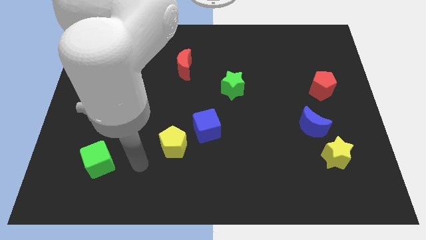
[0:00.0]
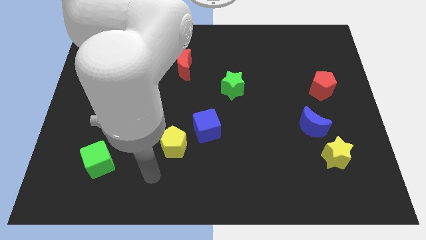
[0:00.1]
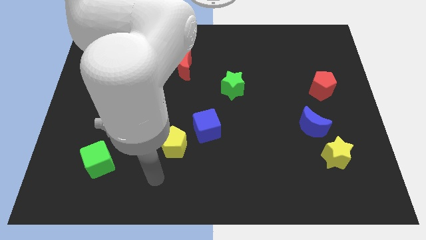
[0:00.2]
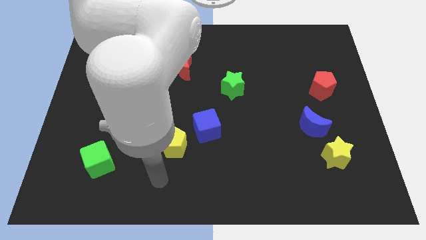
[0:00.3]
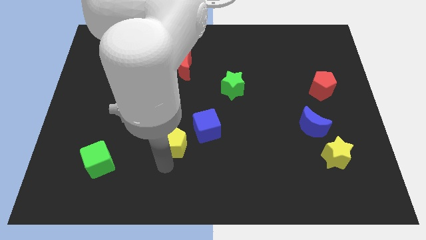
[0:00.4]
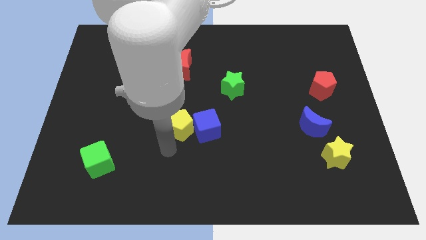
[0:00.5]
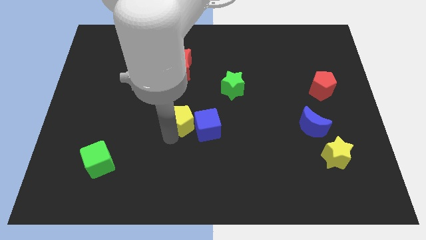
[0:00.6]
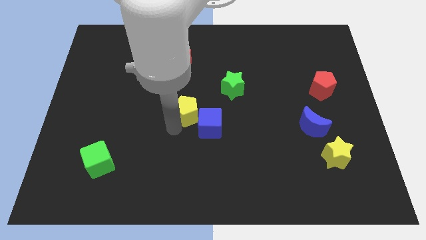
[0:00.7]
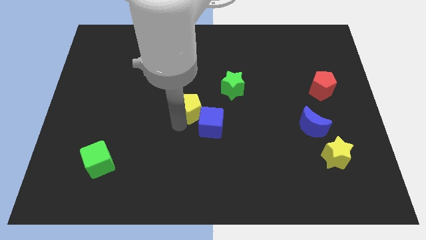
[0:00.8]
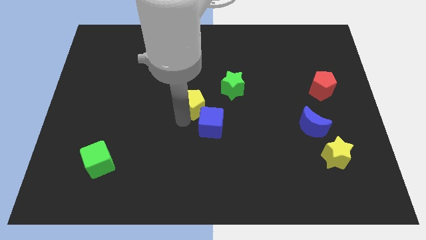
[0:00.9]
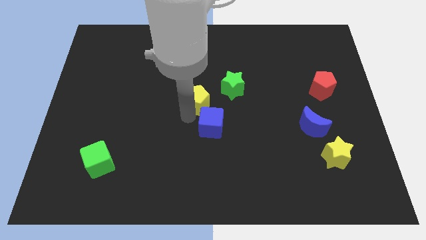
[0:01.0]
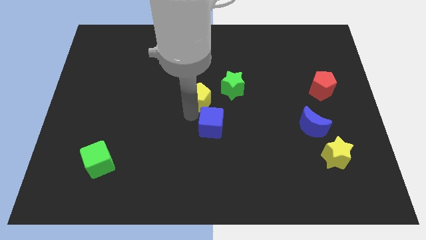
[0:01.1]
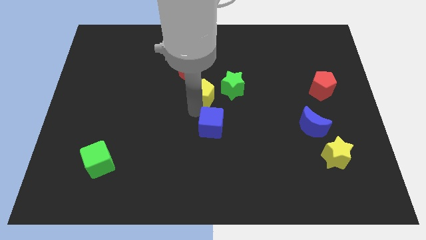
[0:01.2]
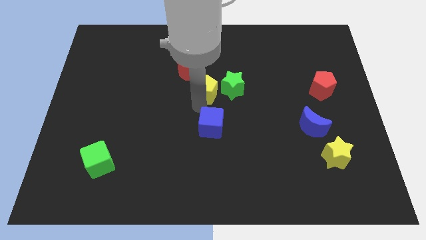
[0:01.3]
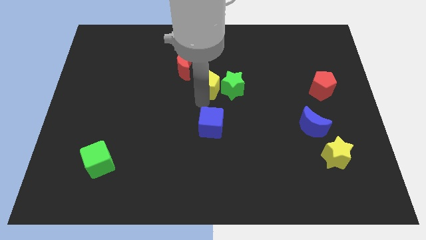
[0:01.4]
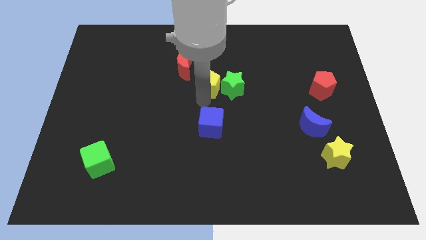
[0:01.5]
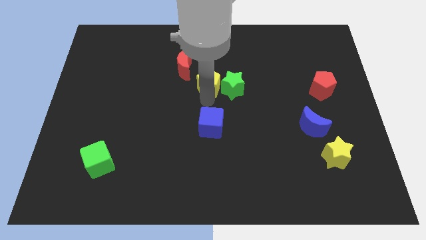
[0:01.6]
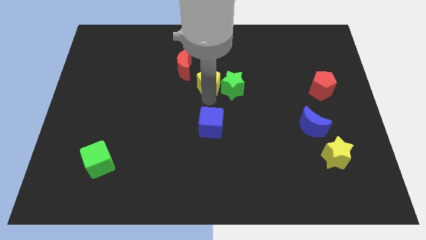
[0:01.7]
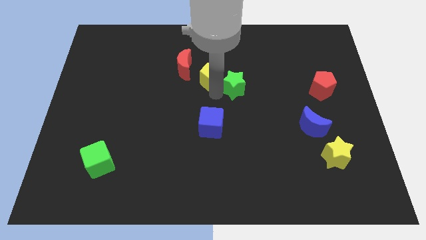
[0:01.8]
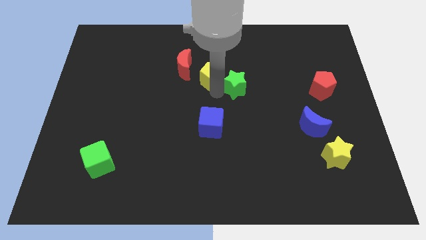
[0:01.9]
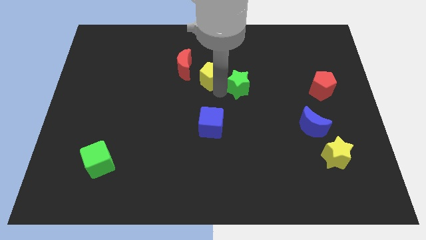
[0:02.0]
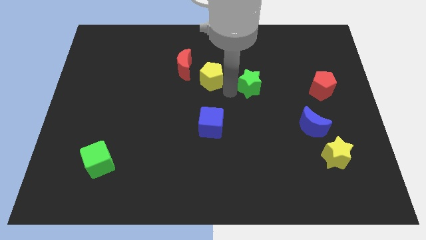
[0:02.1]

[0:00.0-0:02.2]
move the yellow pentagon near to the green star

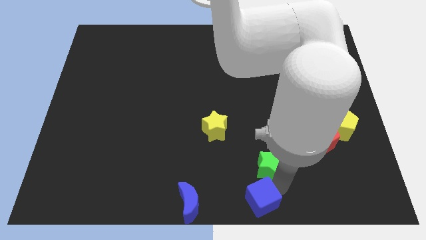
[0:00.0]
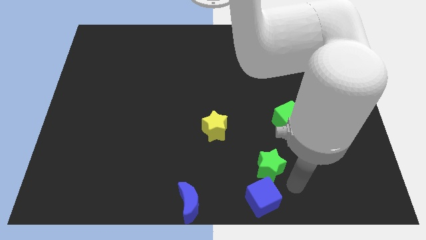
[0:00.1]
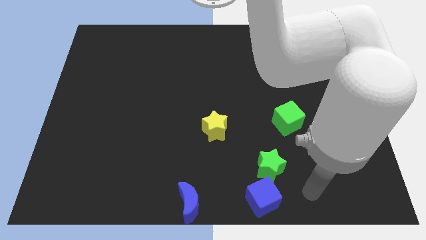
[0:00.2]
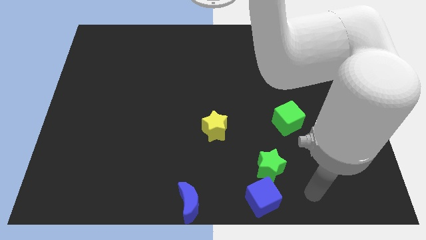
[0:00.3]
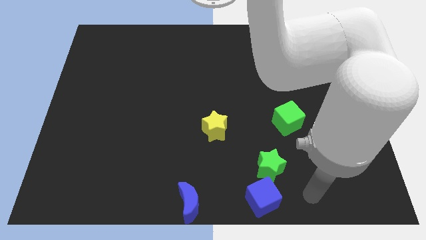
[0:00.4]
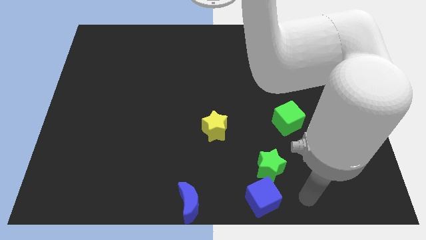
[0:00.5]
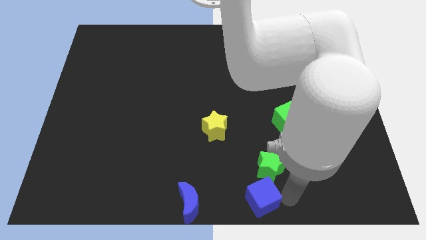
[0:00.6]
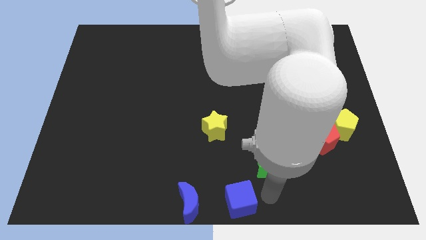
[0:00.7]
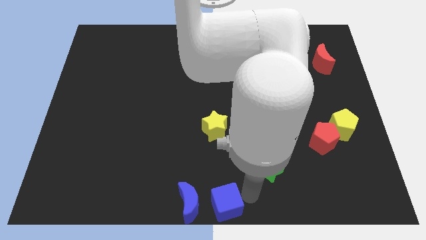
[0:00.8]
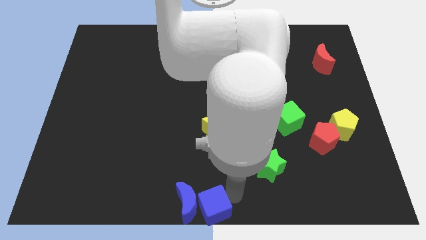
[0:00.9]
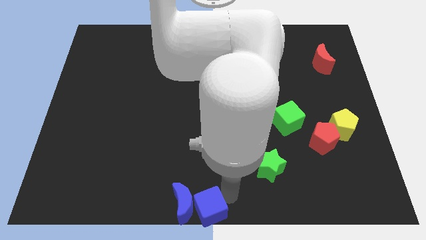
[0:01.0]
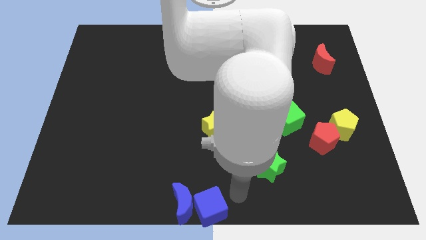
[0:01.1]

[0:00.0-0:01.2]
push the blue cube into the blue crescent

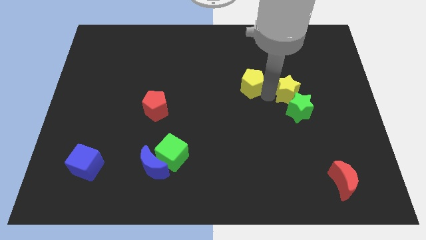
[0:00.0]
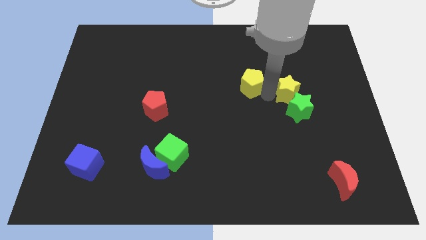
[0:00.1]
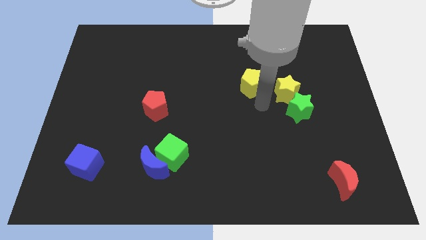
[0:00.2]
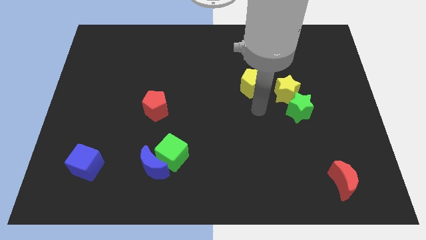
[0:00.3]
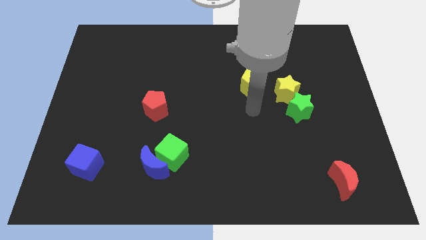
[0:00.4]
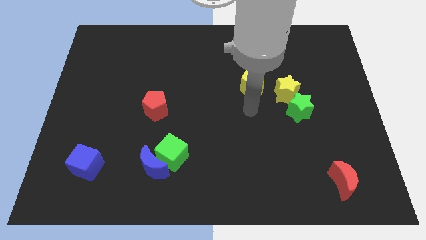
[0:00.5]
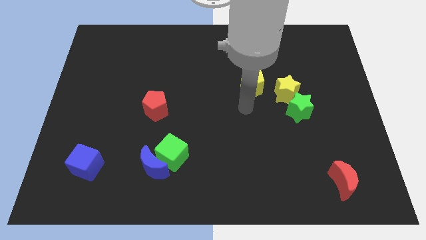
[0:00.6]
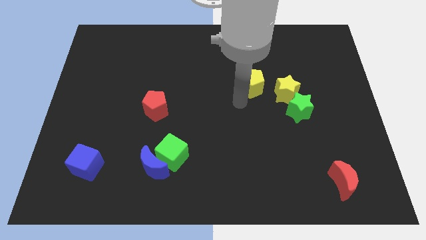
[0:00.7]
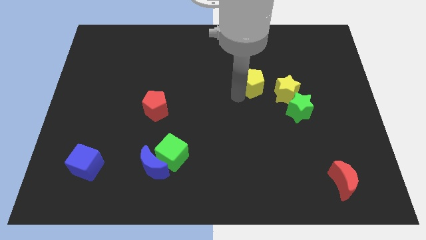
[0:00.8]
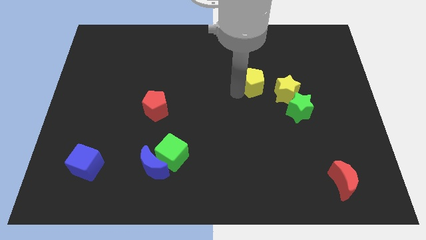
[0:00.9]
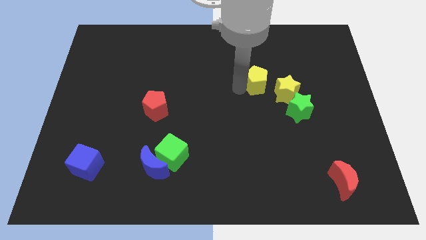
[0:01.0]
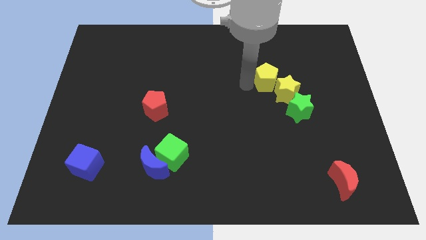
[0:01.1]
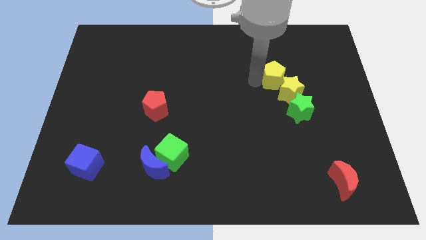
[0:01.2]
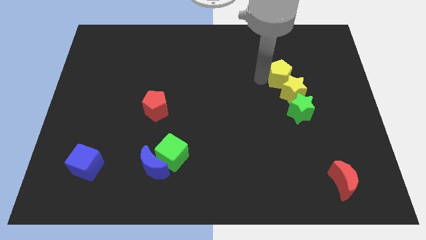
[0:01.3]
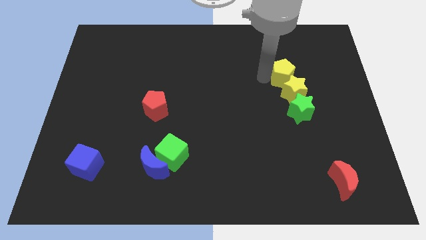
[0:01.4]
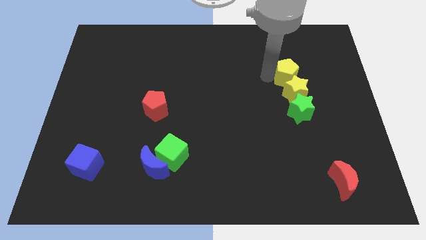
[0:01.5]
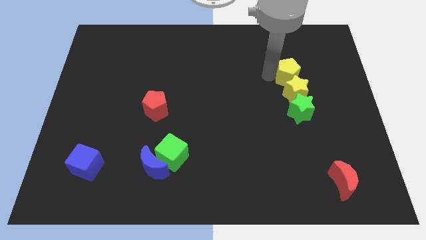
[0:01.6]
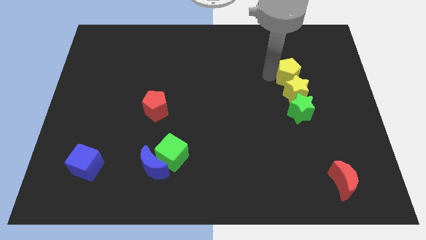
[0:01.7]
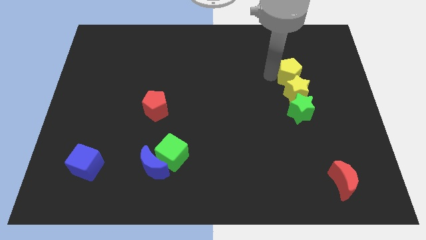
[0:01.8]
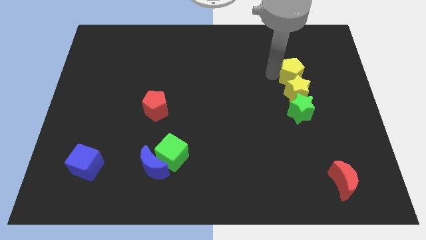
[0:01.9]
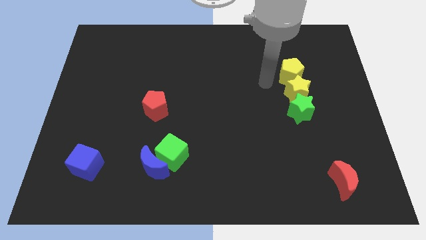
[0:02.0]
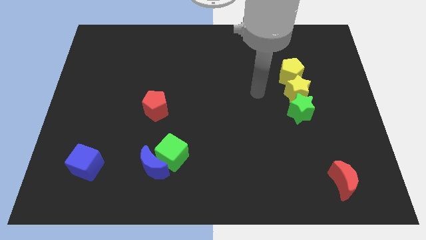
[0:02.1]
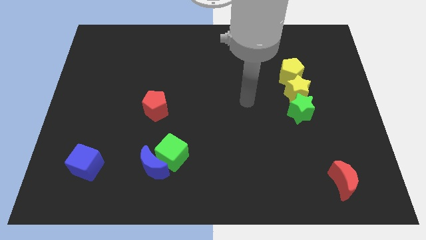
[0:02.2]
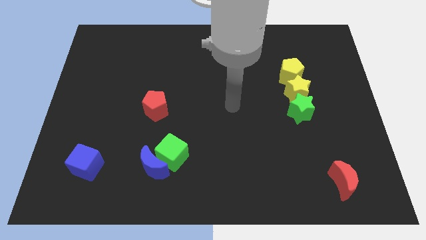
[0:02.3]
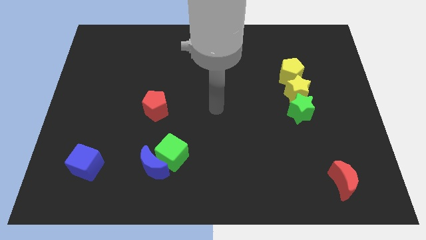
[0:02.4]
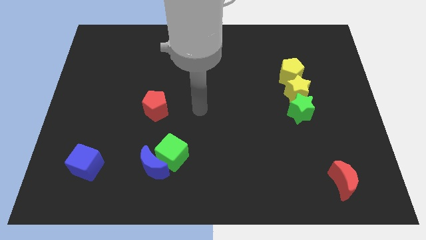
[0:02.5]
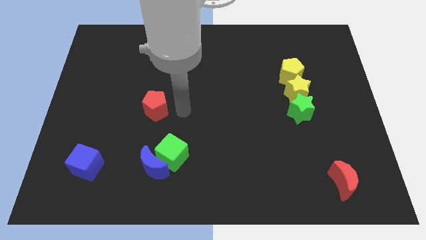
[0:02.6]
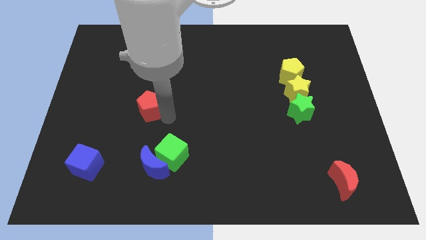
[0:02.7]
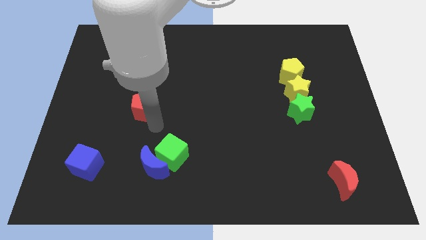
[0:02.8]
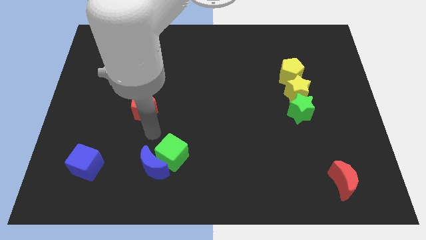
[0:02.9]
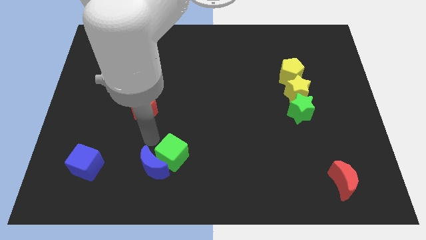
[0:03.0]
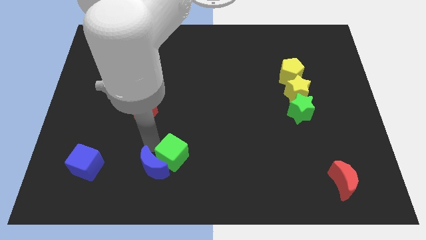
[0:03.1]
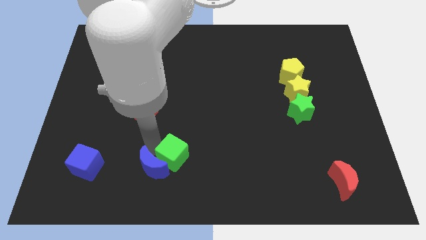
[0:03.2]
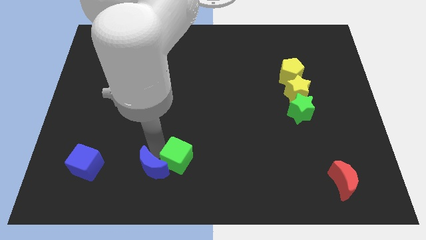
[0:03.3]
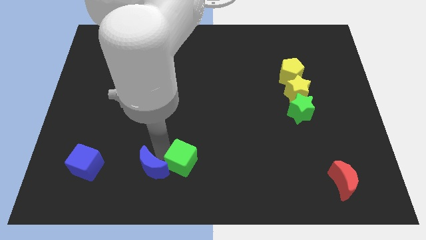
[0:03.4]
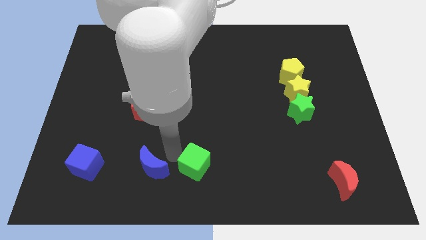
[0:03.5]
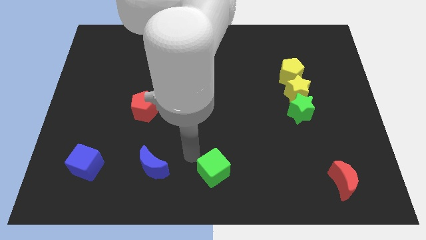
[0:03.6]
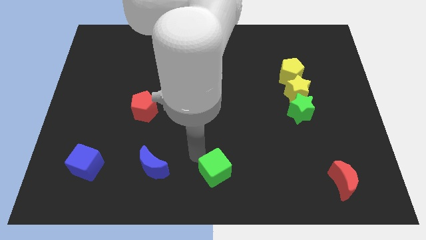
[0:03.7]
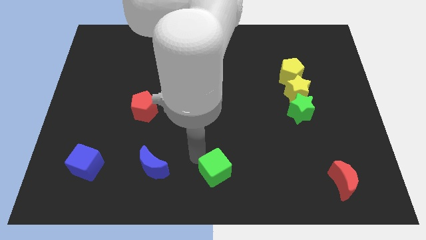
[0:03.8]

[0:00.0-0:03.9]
push the green cube towards the bottom center of the board

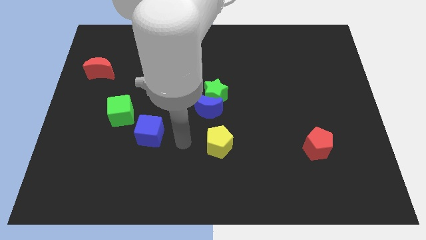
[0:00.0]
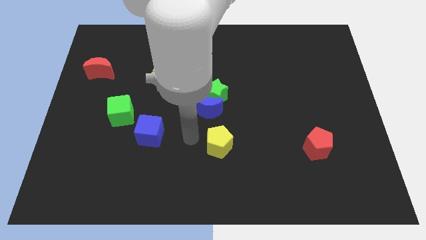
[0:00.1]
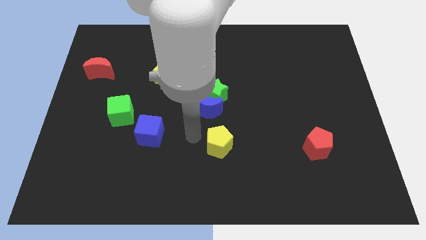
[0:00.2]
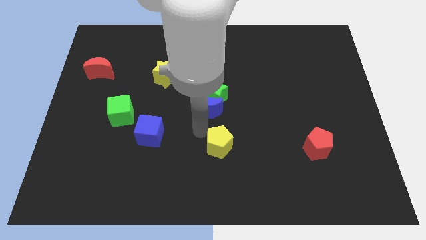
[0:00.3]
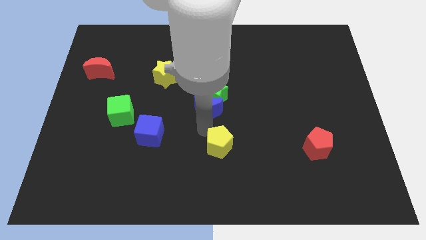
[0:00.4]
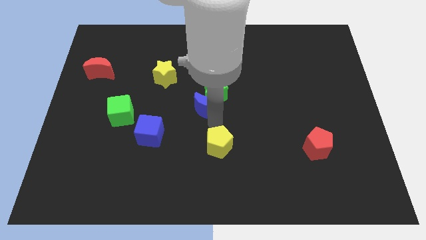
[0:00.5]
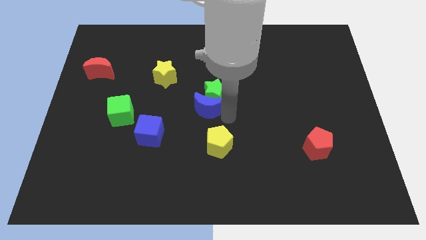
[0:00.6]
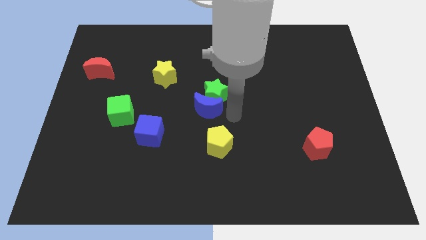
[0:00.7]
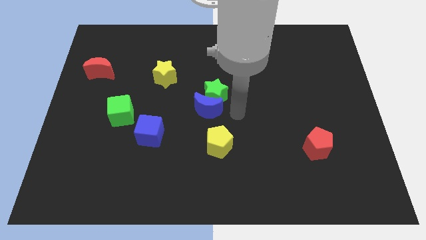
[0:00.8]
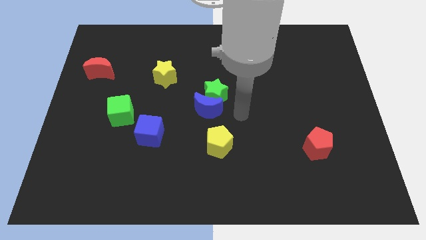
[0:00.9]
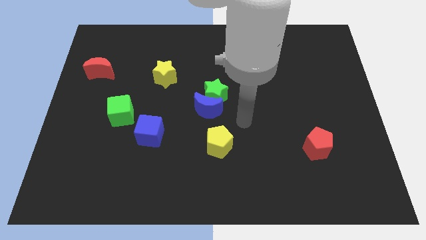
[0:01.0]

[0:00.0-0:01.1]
move your arm away from blue cube

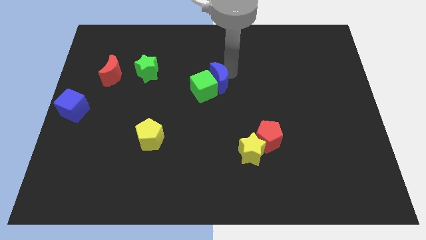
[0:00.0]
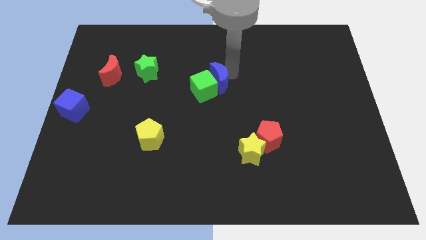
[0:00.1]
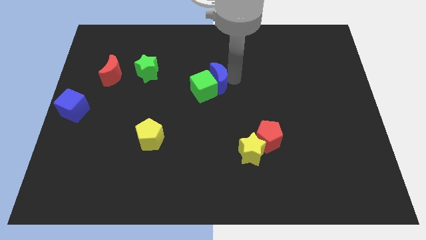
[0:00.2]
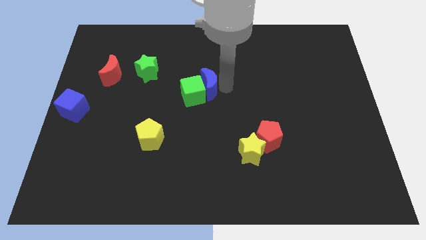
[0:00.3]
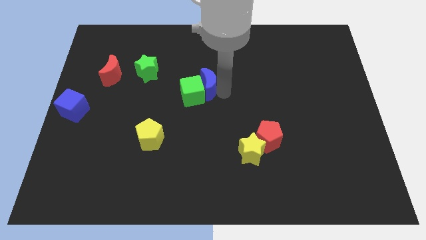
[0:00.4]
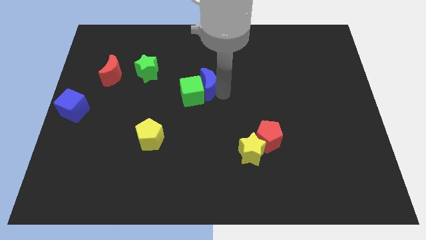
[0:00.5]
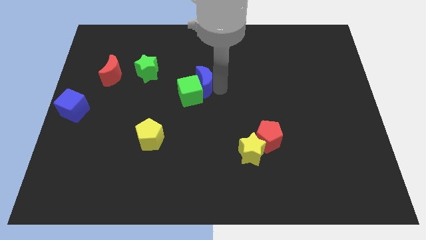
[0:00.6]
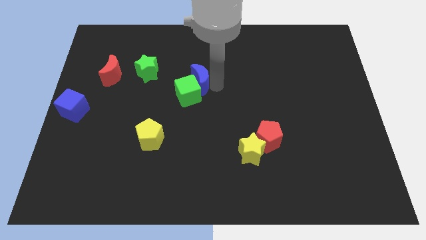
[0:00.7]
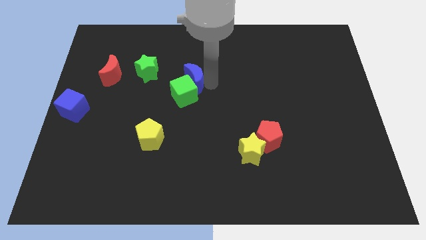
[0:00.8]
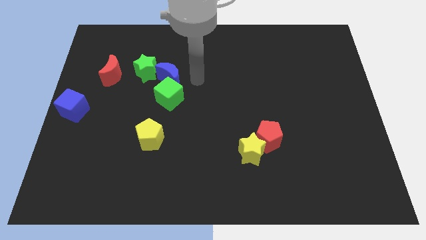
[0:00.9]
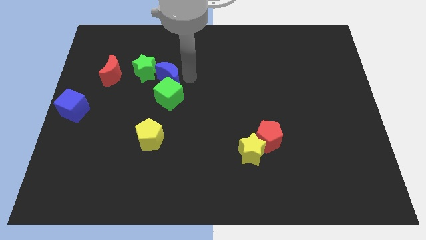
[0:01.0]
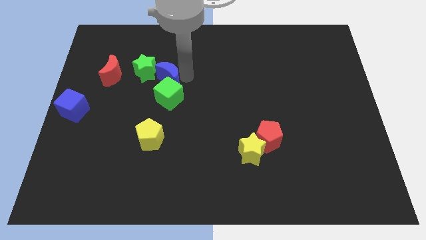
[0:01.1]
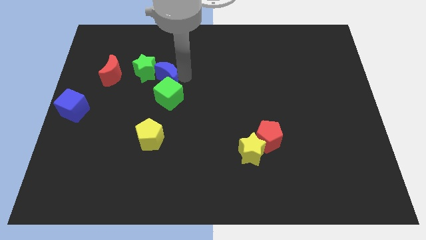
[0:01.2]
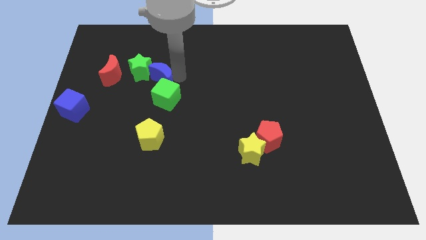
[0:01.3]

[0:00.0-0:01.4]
move blue moon into green star
